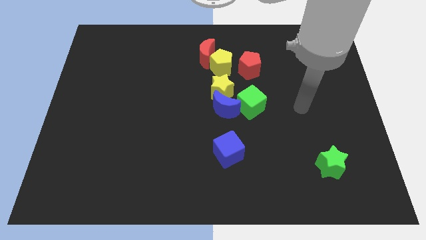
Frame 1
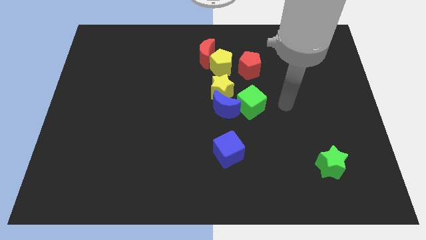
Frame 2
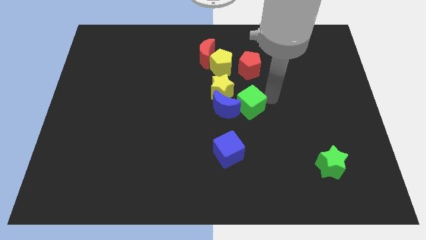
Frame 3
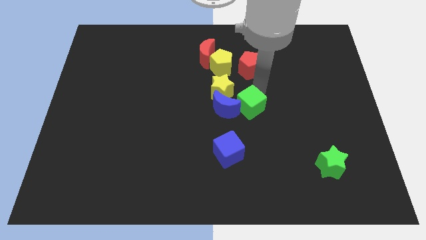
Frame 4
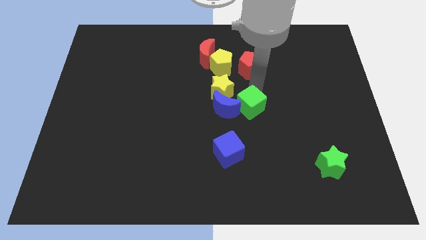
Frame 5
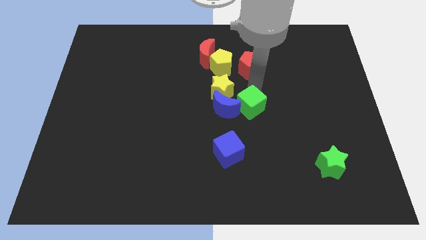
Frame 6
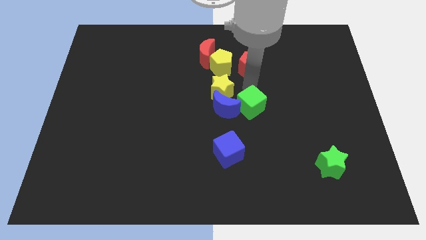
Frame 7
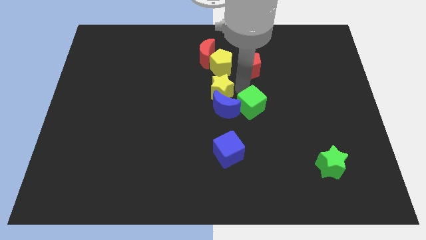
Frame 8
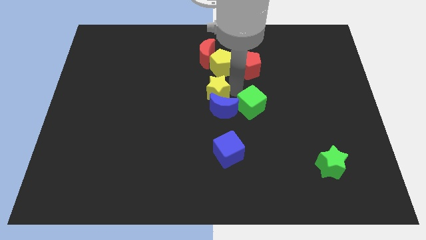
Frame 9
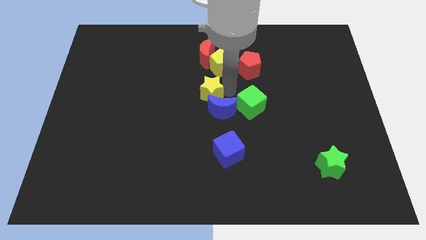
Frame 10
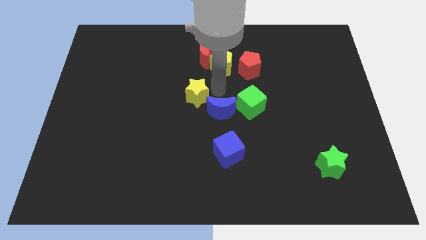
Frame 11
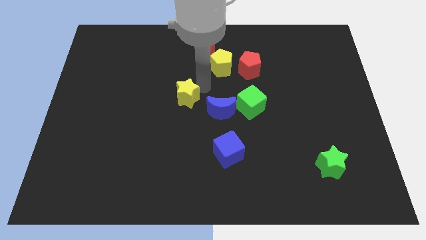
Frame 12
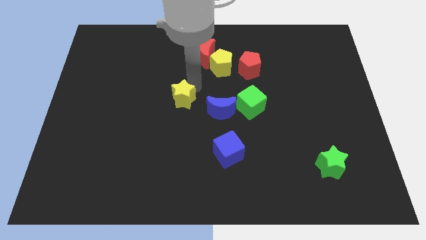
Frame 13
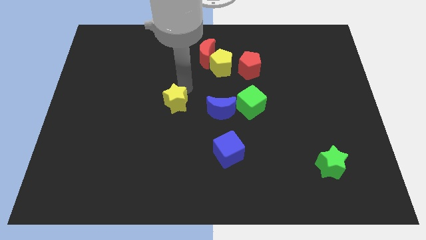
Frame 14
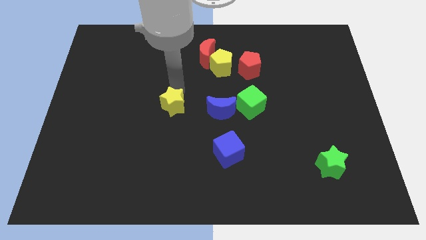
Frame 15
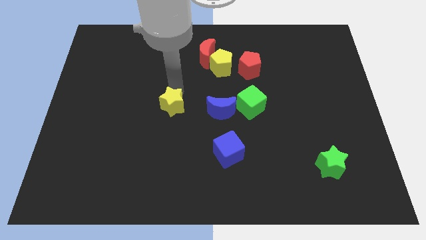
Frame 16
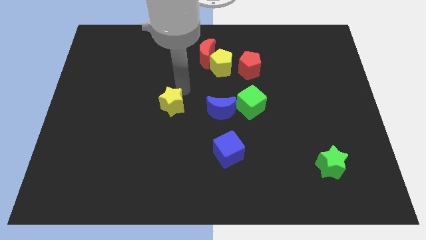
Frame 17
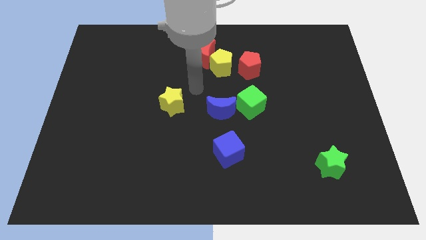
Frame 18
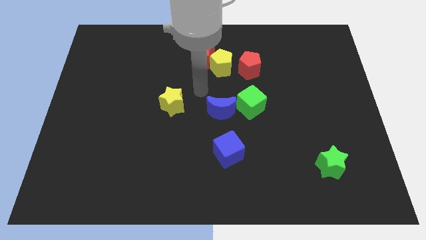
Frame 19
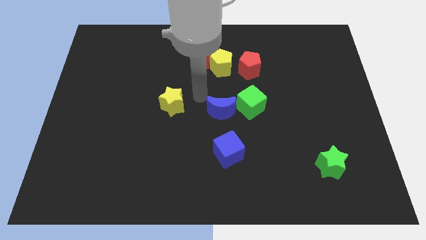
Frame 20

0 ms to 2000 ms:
separate yellow star from blue crescent

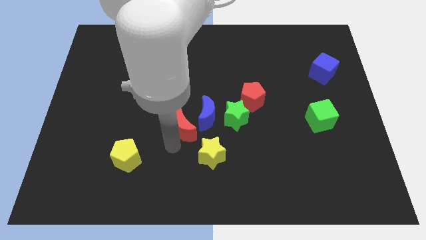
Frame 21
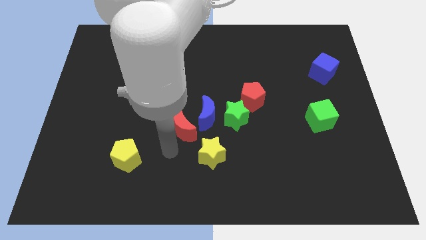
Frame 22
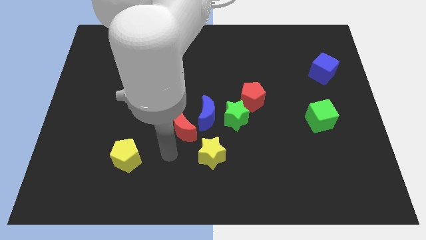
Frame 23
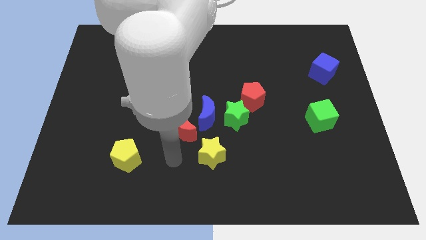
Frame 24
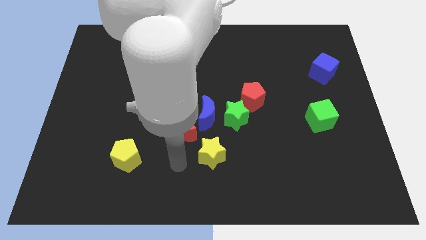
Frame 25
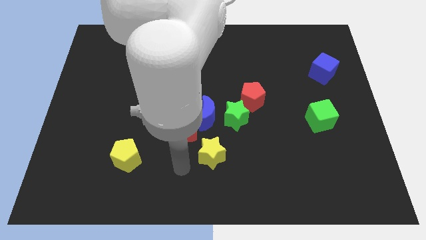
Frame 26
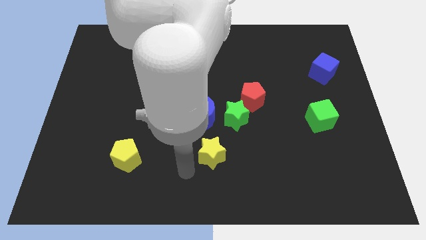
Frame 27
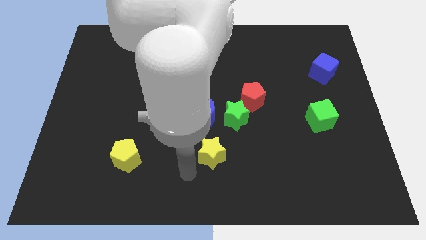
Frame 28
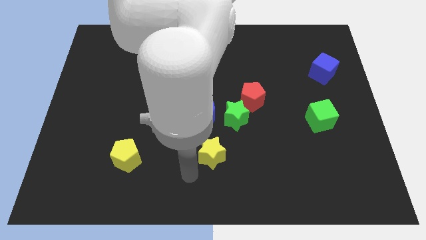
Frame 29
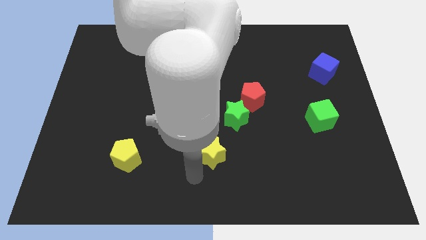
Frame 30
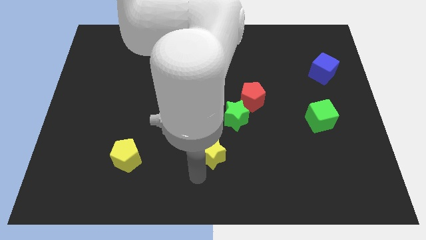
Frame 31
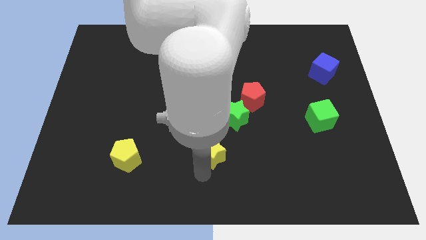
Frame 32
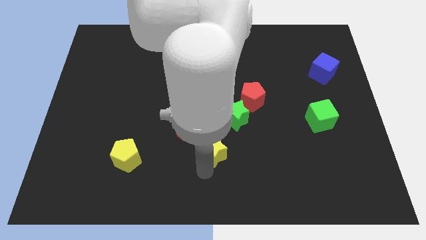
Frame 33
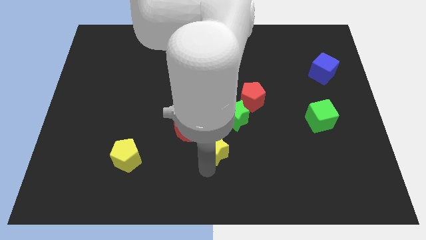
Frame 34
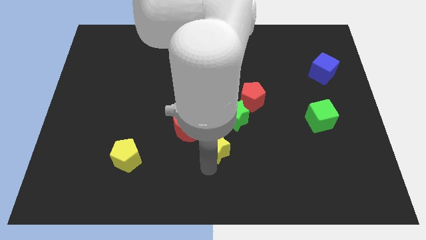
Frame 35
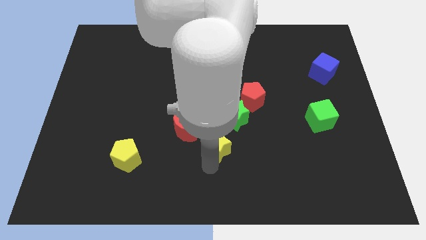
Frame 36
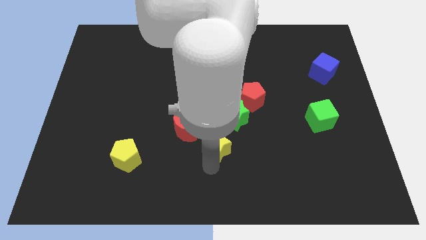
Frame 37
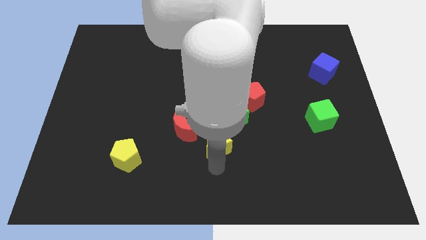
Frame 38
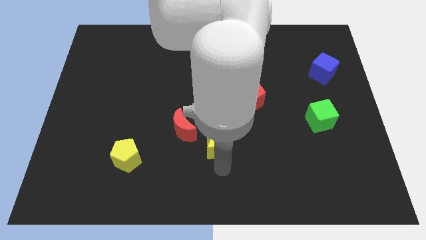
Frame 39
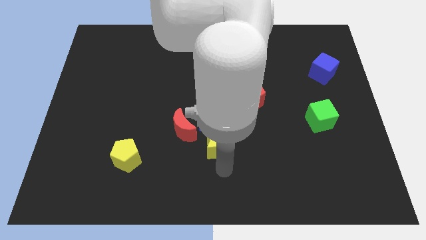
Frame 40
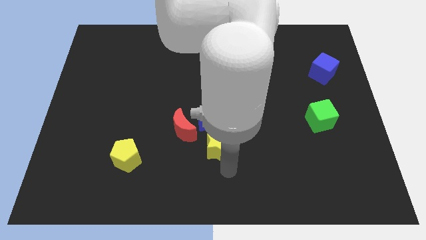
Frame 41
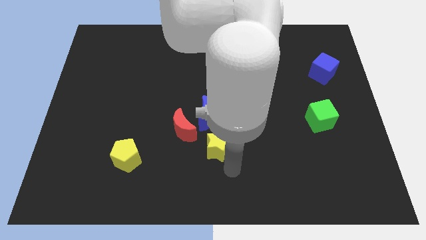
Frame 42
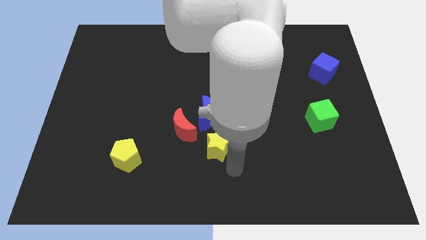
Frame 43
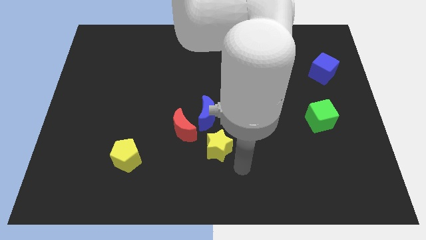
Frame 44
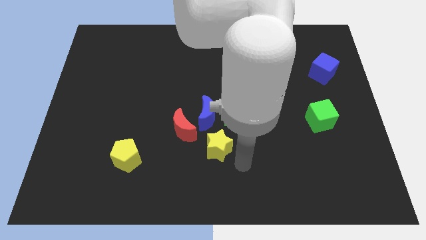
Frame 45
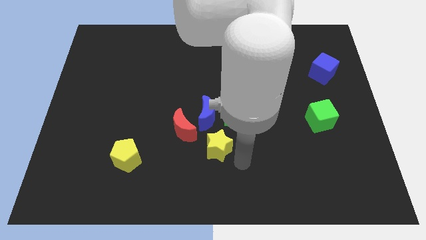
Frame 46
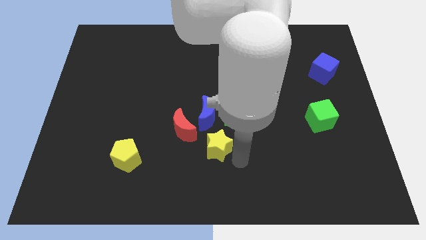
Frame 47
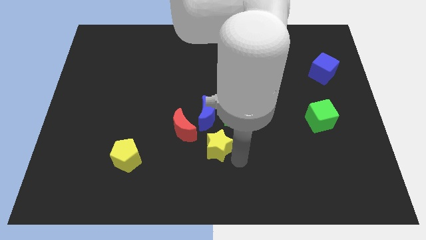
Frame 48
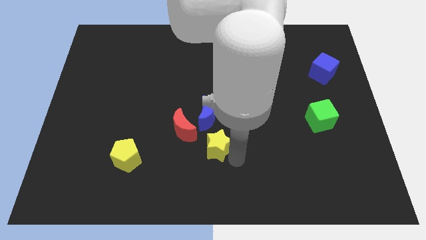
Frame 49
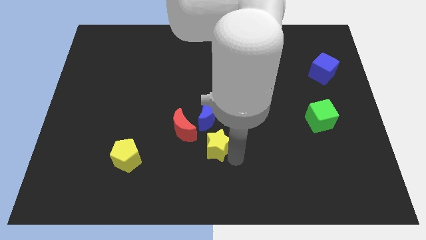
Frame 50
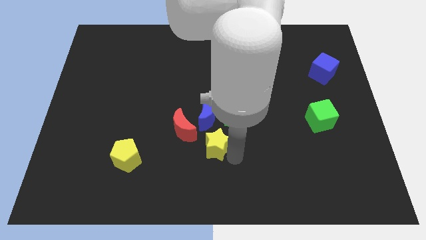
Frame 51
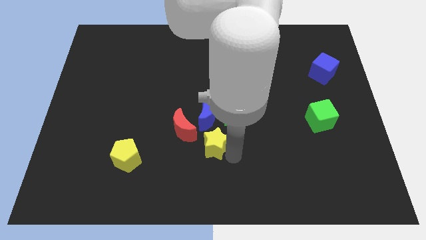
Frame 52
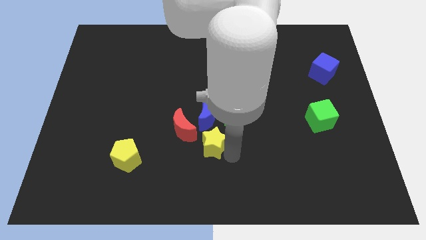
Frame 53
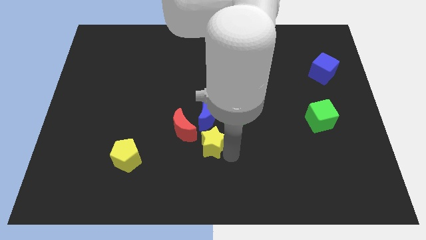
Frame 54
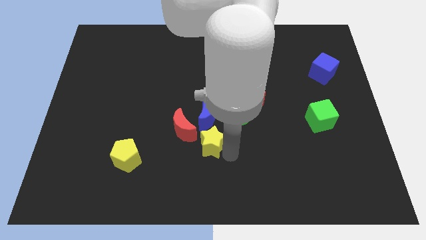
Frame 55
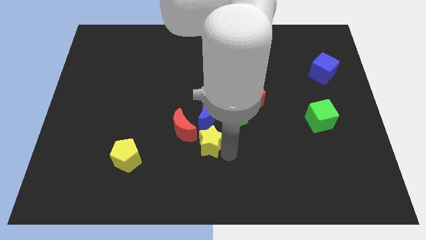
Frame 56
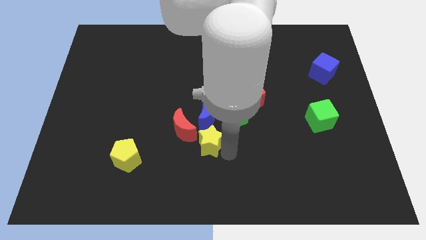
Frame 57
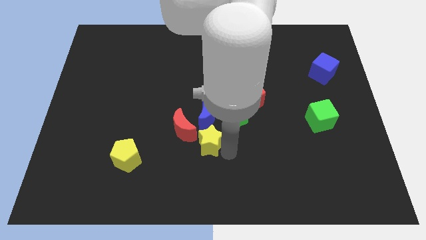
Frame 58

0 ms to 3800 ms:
move the yellow star close to the red crescent

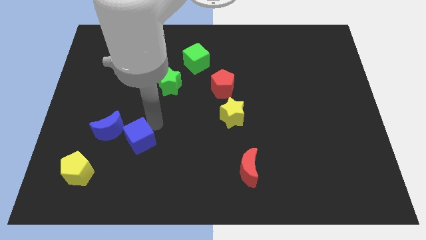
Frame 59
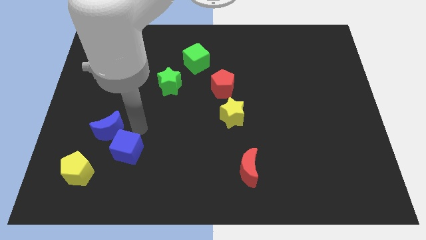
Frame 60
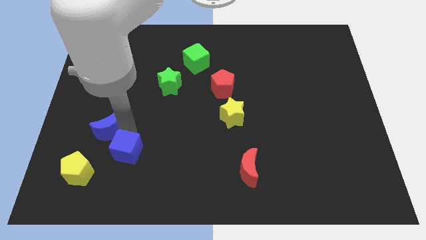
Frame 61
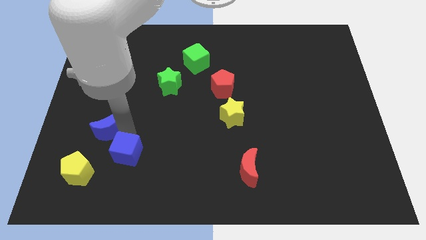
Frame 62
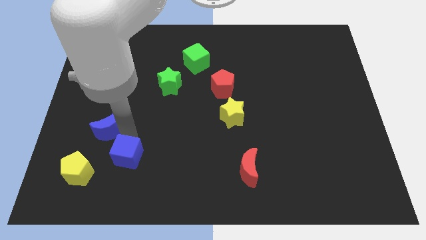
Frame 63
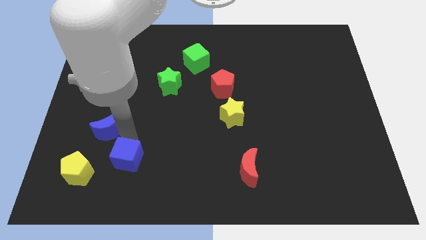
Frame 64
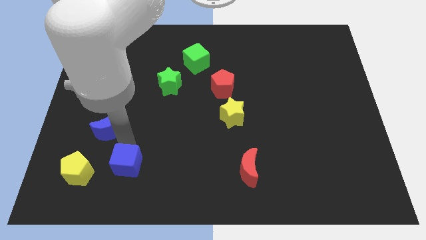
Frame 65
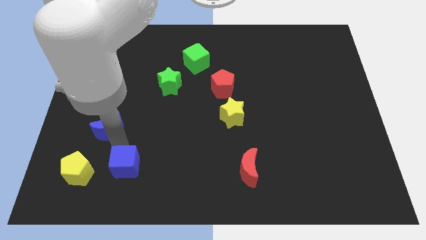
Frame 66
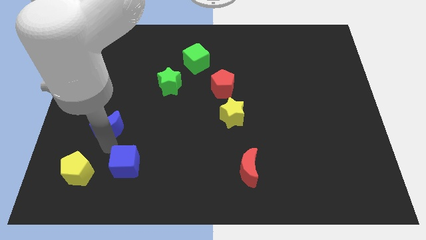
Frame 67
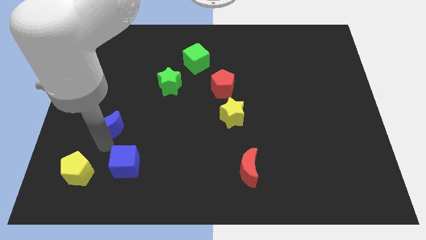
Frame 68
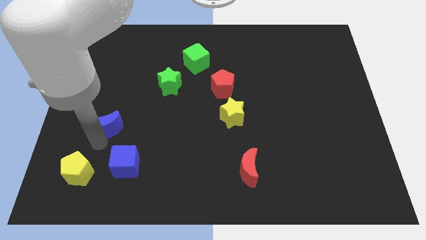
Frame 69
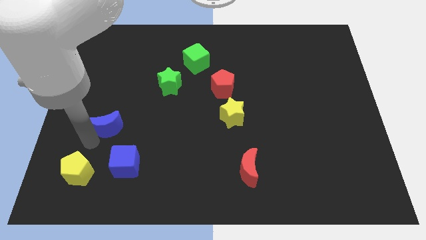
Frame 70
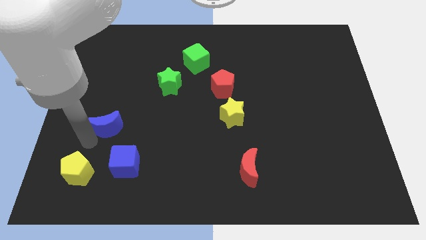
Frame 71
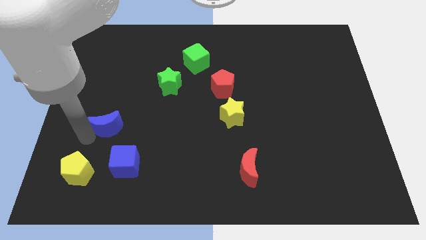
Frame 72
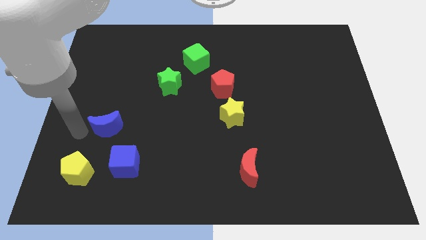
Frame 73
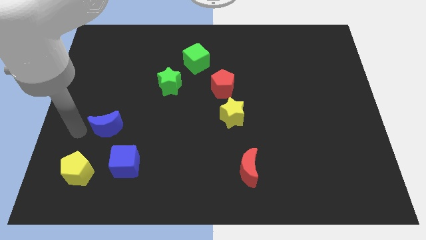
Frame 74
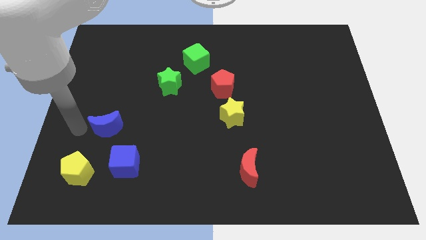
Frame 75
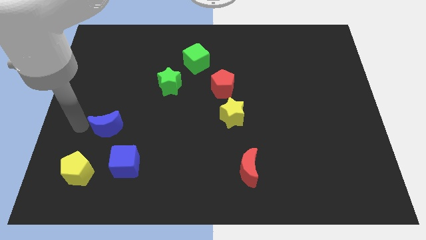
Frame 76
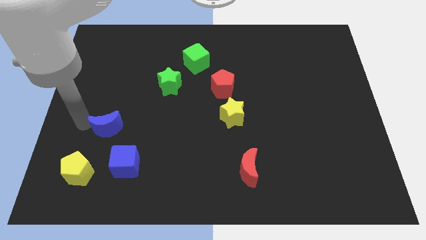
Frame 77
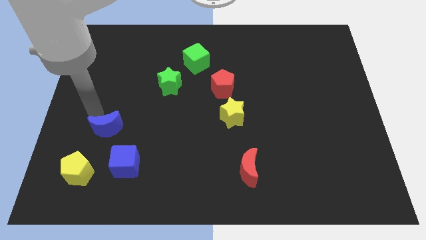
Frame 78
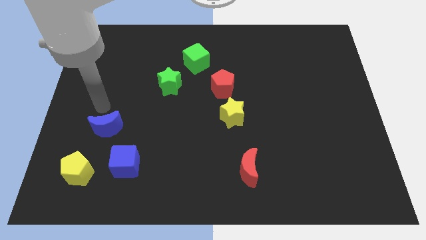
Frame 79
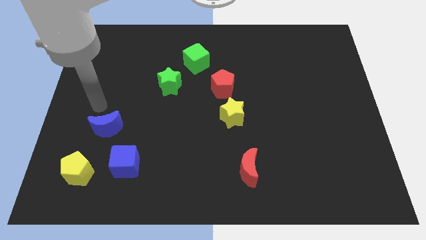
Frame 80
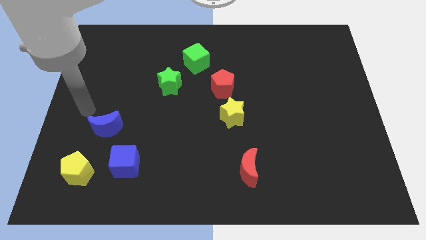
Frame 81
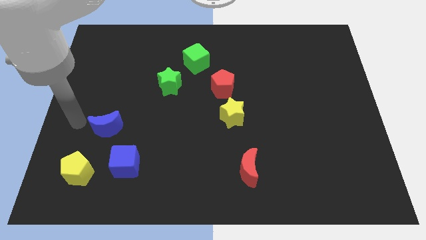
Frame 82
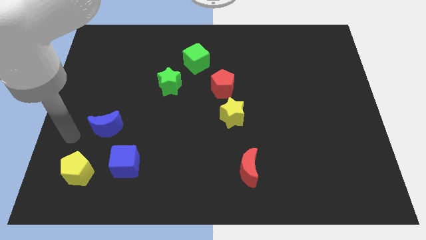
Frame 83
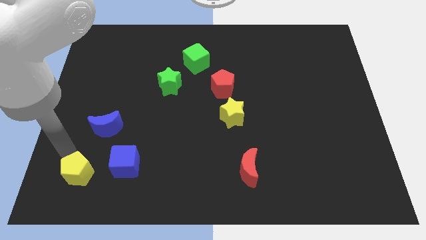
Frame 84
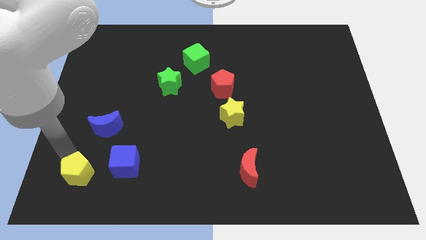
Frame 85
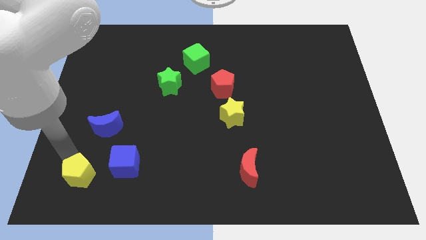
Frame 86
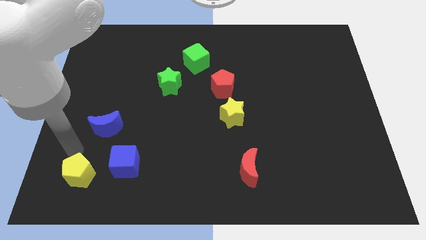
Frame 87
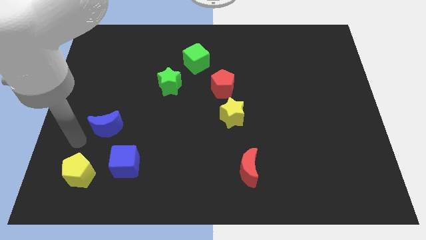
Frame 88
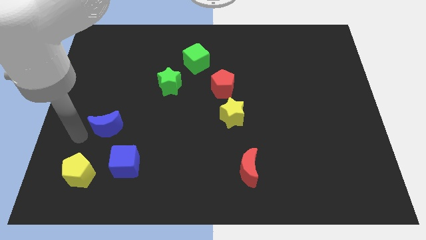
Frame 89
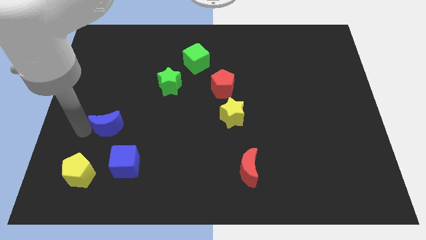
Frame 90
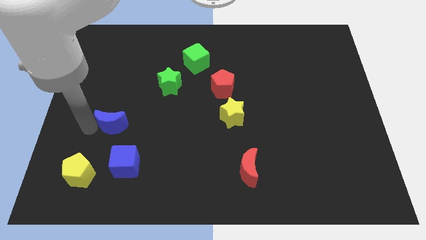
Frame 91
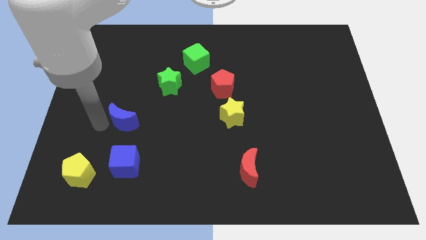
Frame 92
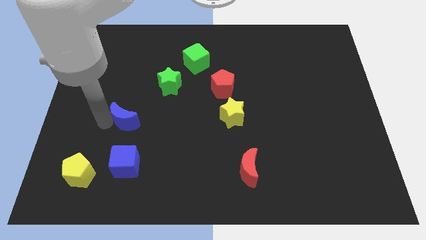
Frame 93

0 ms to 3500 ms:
push blue crescent above blue cube
